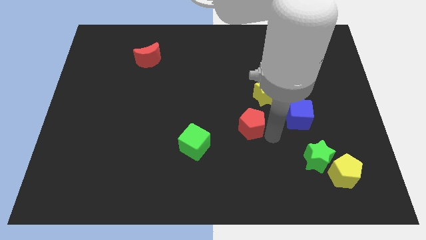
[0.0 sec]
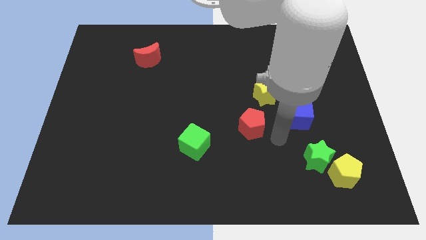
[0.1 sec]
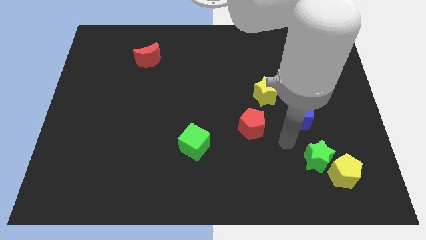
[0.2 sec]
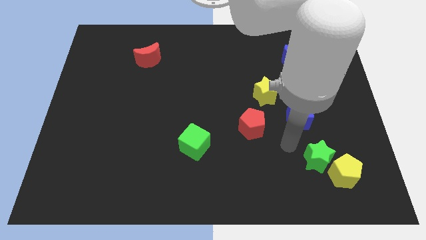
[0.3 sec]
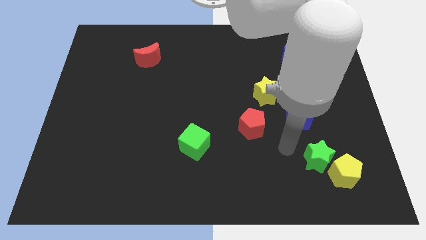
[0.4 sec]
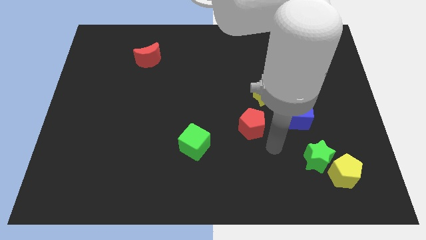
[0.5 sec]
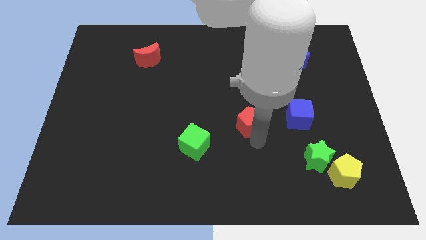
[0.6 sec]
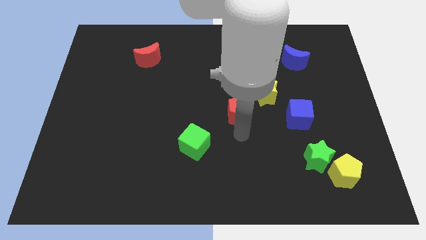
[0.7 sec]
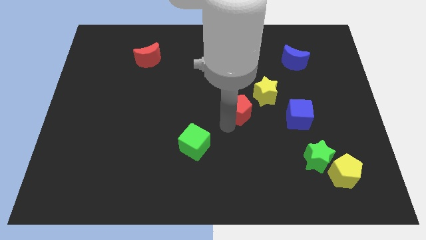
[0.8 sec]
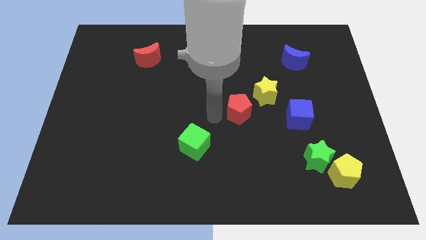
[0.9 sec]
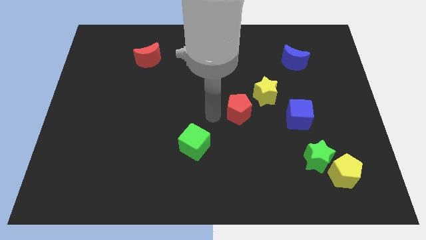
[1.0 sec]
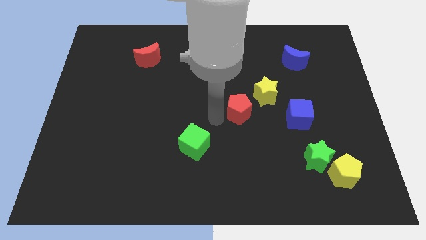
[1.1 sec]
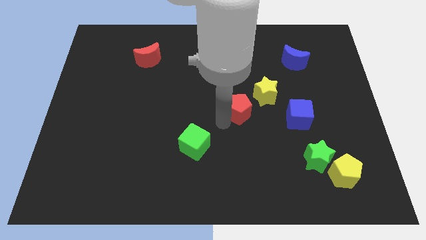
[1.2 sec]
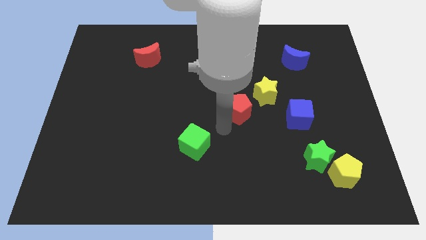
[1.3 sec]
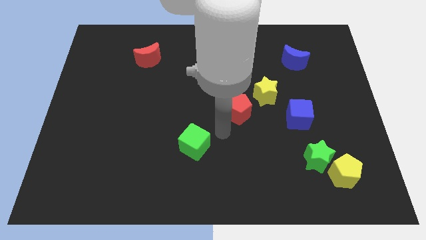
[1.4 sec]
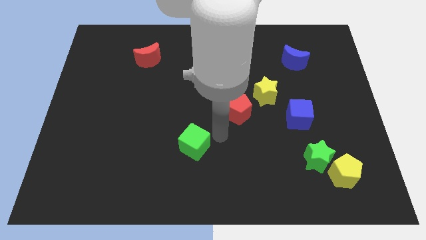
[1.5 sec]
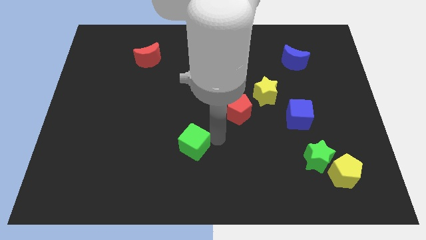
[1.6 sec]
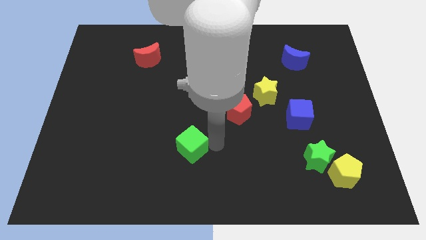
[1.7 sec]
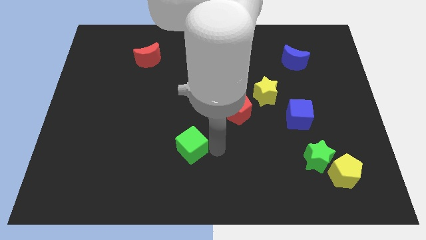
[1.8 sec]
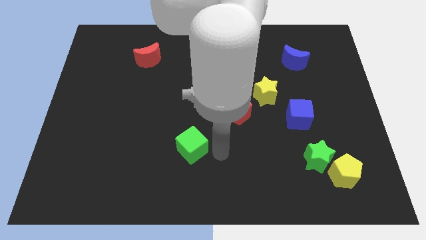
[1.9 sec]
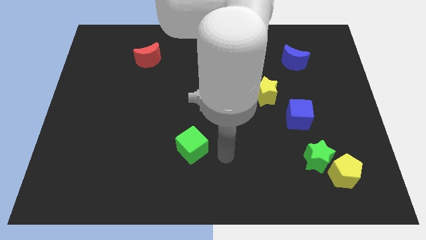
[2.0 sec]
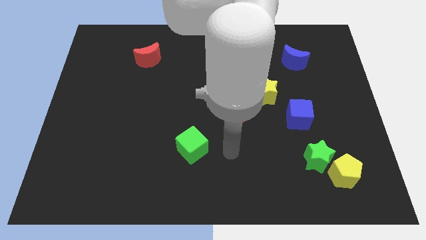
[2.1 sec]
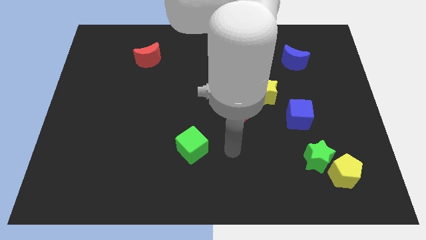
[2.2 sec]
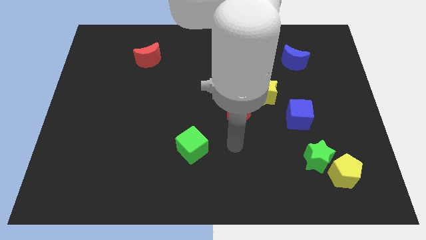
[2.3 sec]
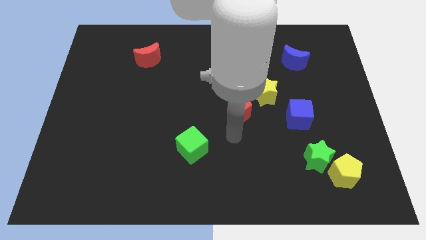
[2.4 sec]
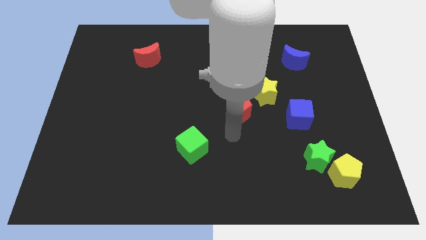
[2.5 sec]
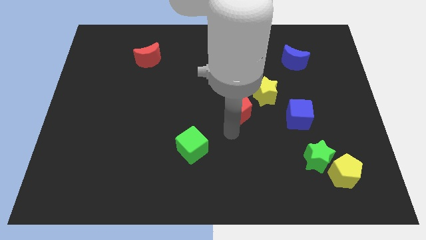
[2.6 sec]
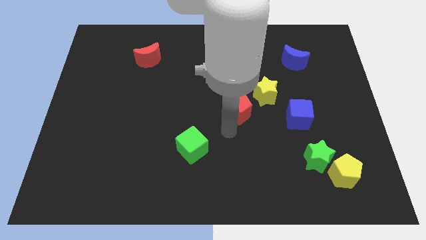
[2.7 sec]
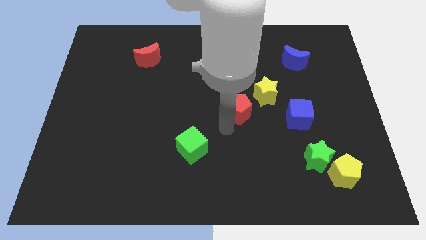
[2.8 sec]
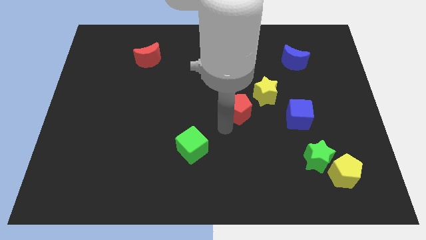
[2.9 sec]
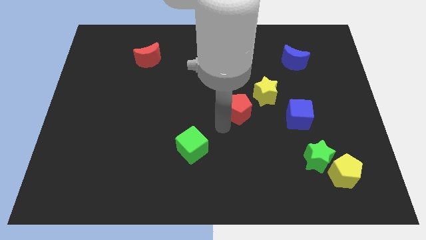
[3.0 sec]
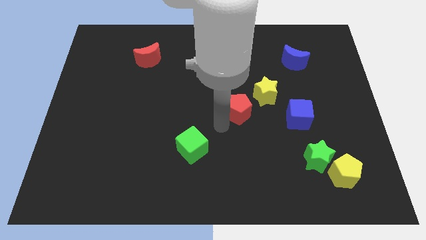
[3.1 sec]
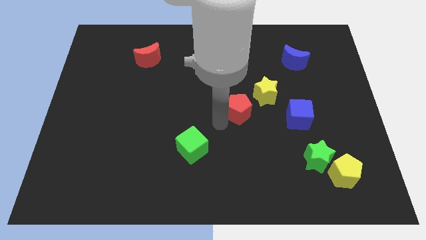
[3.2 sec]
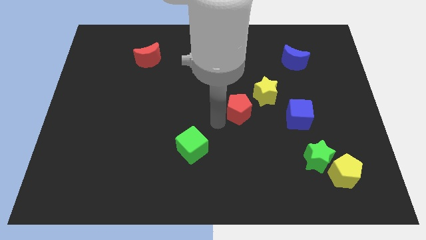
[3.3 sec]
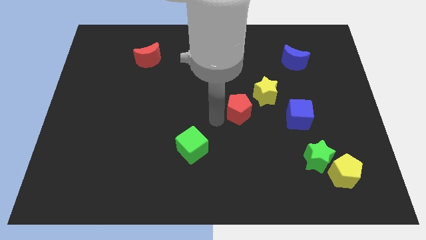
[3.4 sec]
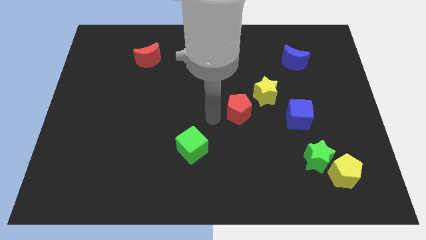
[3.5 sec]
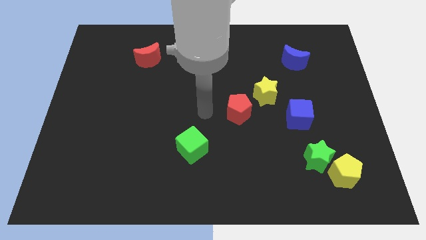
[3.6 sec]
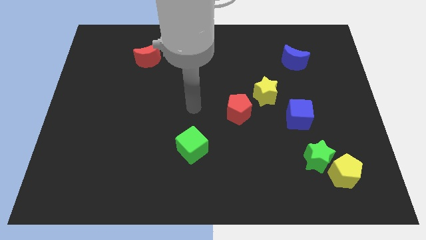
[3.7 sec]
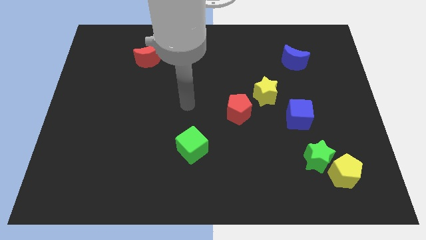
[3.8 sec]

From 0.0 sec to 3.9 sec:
place the red pentagon bottom left diagonal to the yellow star

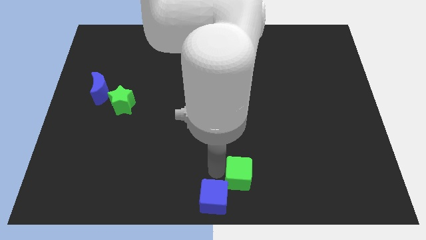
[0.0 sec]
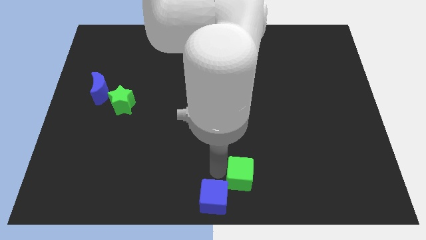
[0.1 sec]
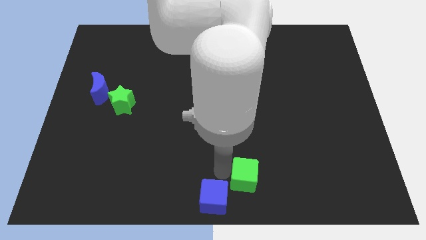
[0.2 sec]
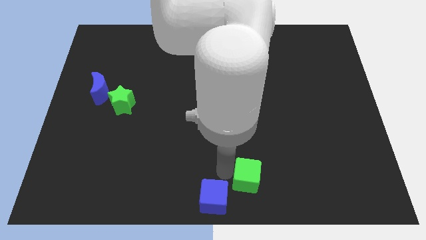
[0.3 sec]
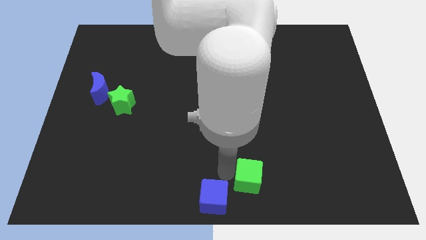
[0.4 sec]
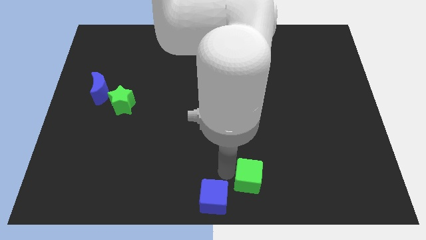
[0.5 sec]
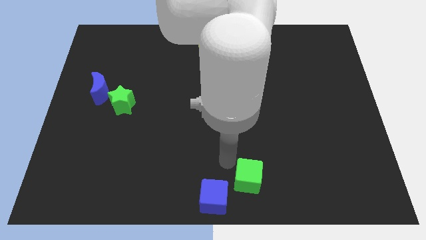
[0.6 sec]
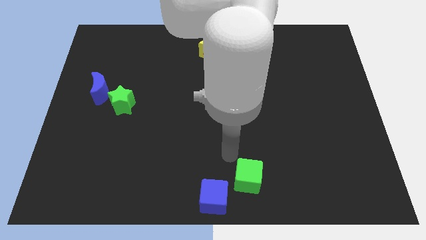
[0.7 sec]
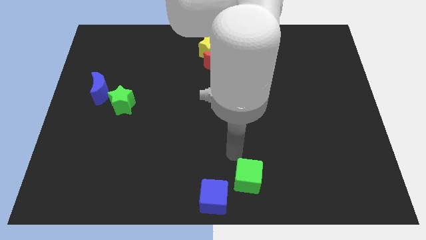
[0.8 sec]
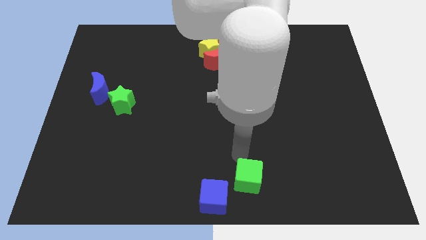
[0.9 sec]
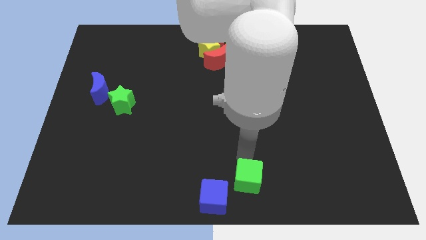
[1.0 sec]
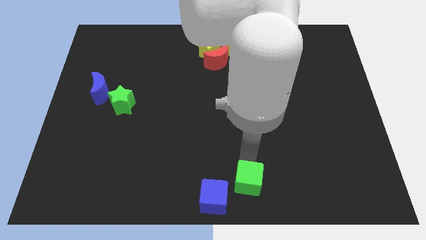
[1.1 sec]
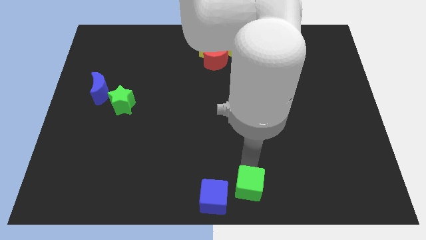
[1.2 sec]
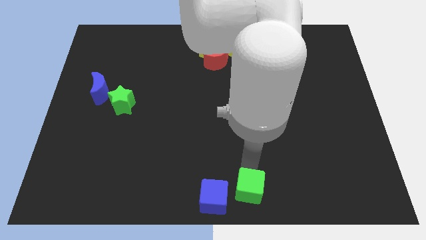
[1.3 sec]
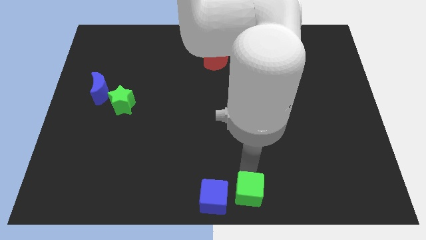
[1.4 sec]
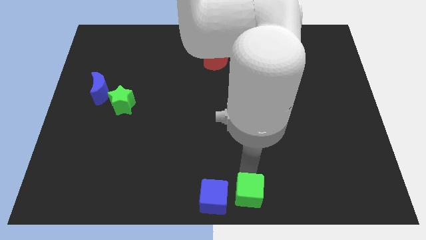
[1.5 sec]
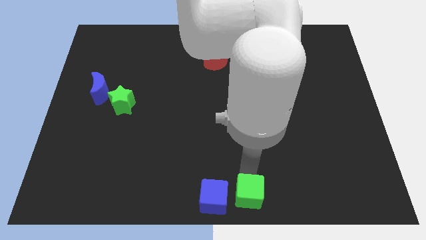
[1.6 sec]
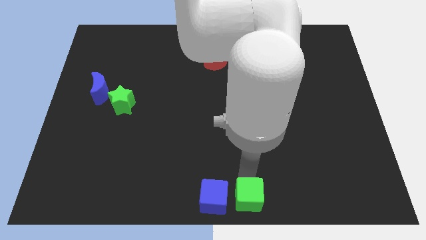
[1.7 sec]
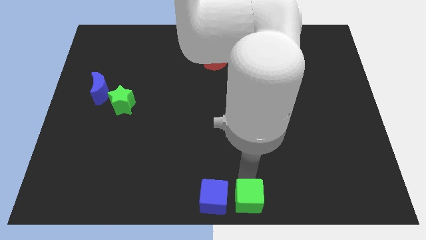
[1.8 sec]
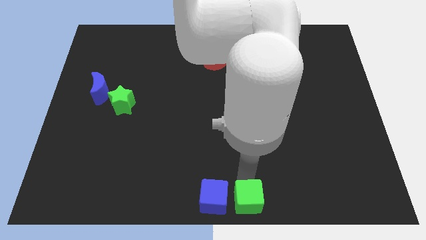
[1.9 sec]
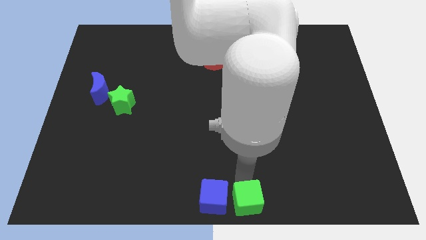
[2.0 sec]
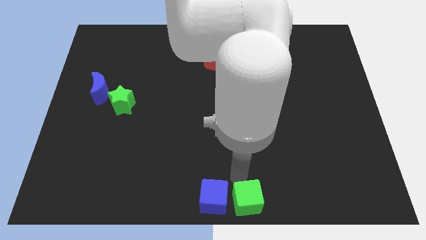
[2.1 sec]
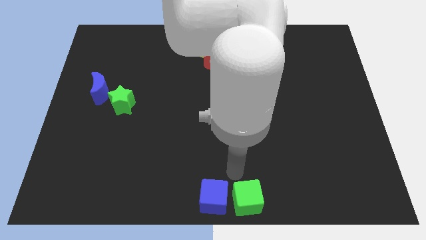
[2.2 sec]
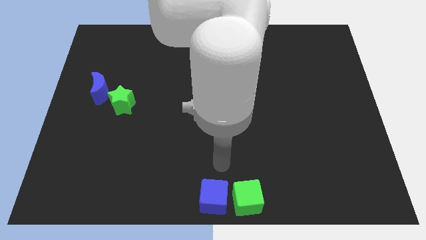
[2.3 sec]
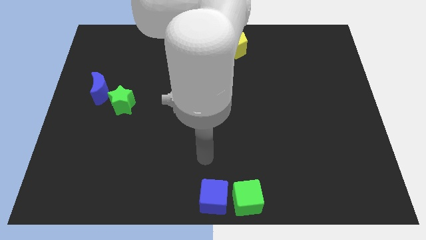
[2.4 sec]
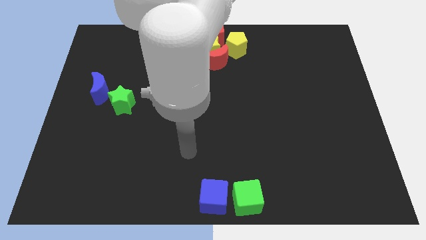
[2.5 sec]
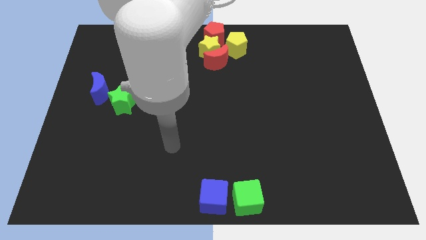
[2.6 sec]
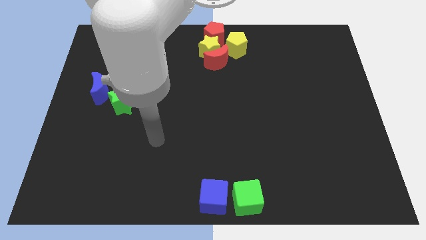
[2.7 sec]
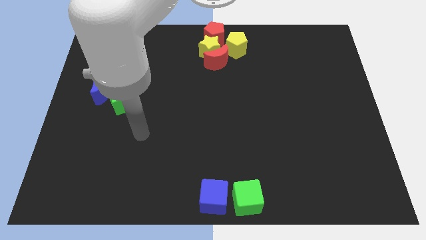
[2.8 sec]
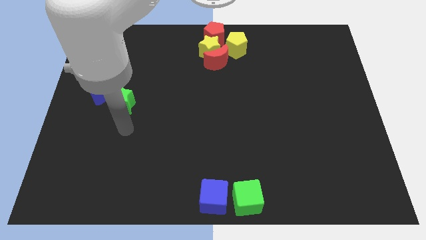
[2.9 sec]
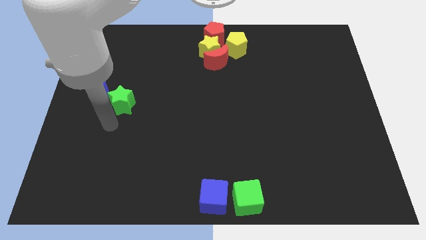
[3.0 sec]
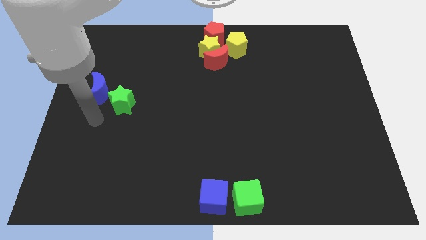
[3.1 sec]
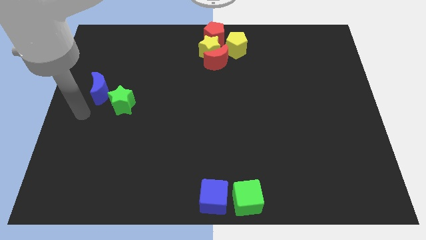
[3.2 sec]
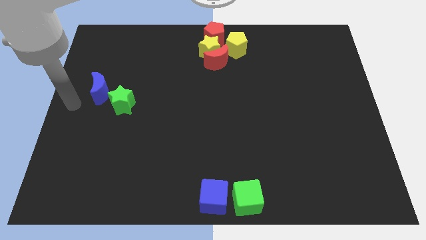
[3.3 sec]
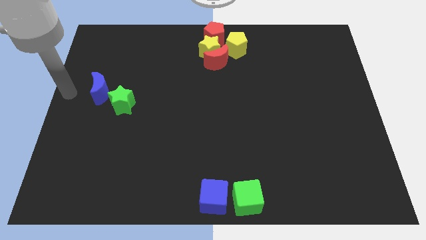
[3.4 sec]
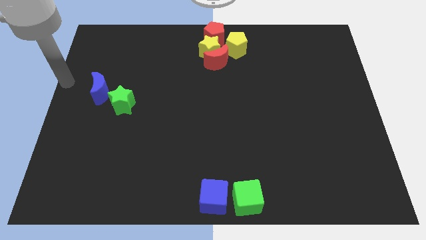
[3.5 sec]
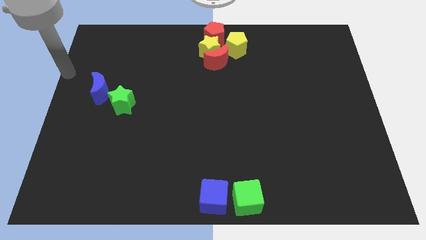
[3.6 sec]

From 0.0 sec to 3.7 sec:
place the green cube parallel right to the blue cube

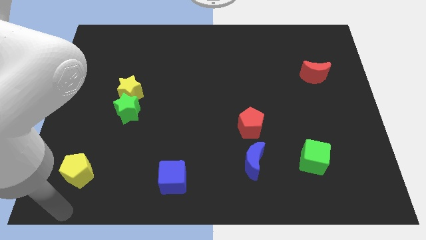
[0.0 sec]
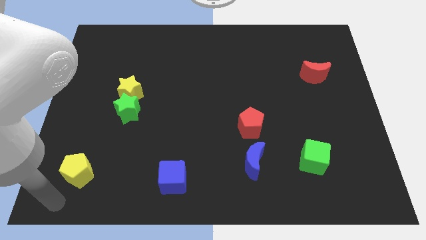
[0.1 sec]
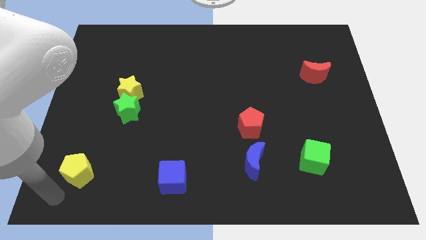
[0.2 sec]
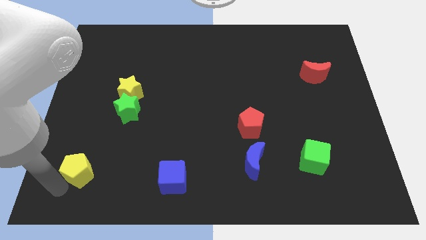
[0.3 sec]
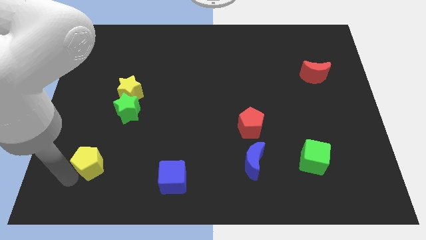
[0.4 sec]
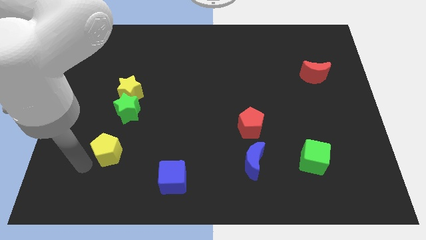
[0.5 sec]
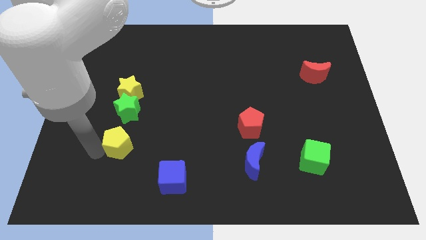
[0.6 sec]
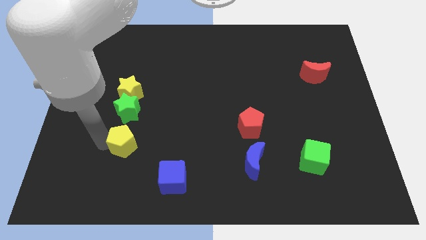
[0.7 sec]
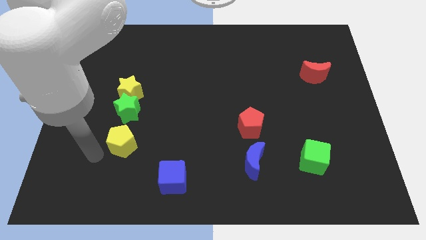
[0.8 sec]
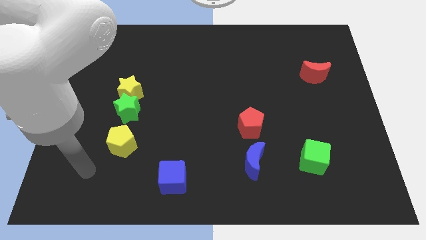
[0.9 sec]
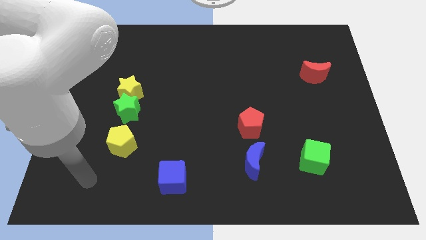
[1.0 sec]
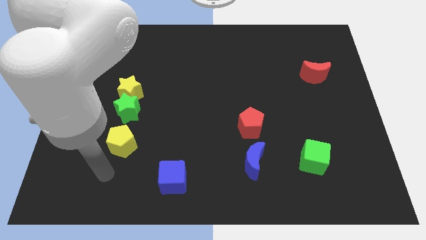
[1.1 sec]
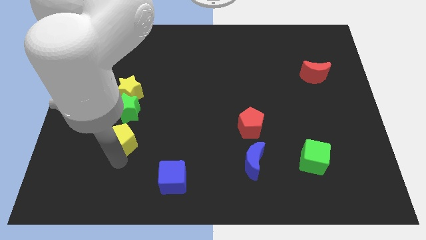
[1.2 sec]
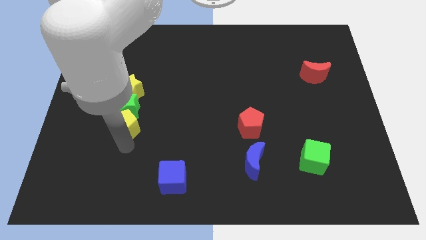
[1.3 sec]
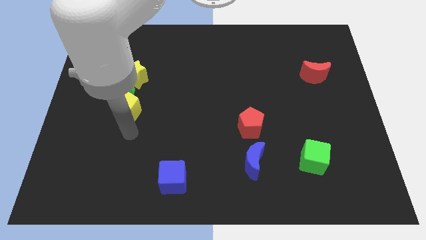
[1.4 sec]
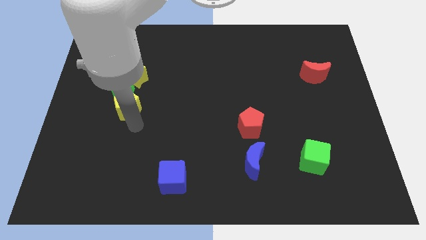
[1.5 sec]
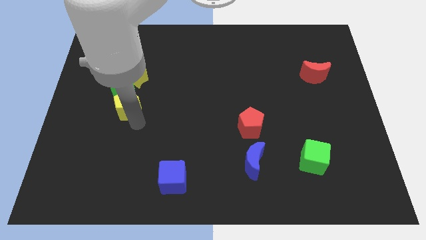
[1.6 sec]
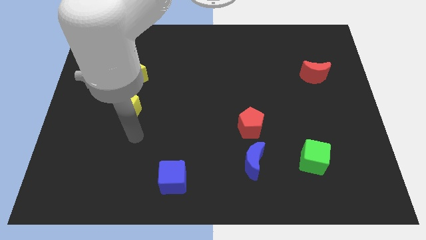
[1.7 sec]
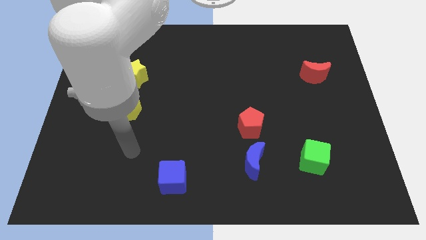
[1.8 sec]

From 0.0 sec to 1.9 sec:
push yellow pentagon close to the green star
